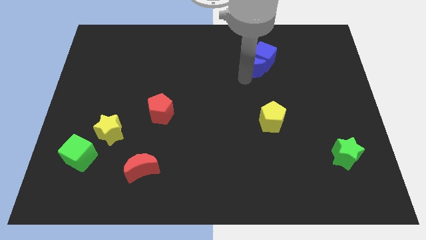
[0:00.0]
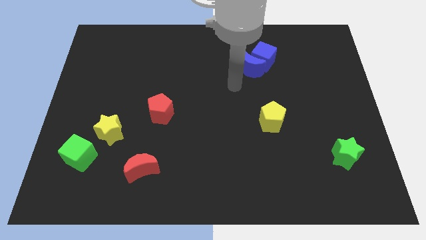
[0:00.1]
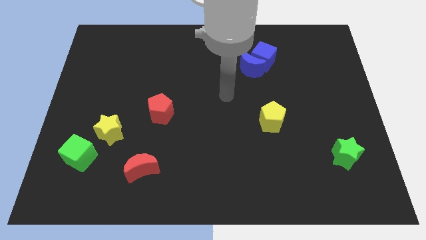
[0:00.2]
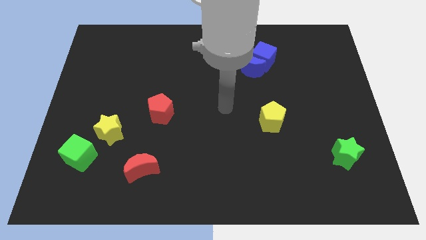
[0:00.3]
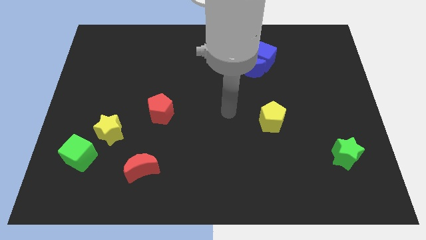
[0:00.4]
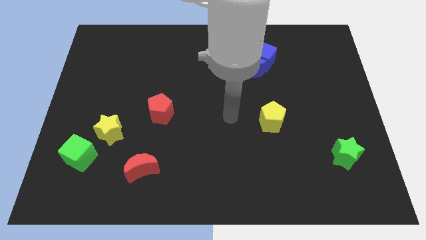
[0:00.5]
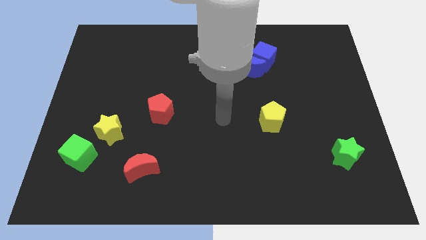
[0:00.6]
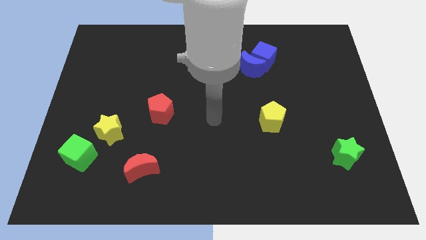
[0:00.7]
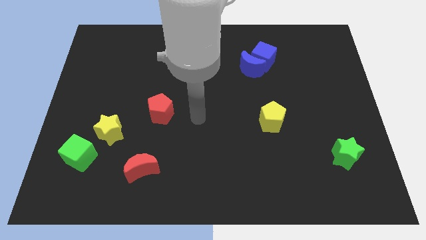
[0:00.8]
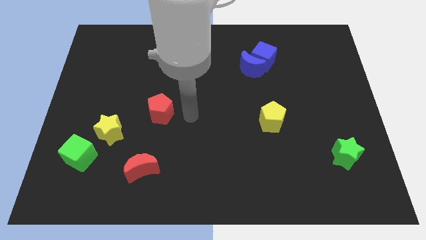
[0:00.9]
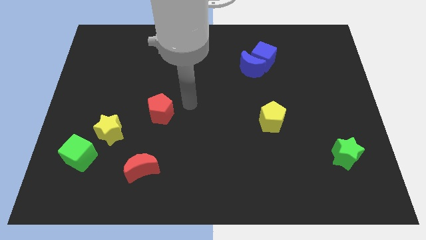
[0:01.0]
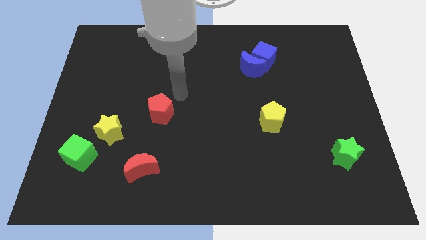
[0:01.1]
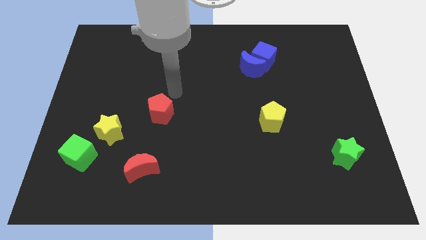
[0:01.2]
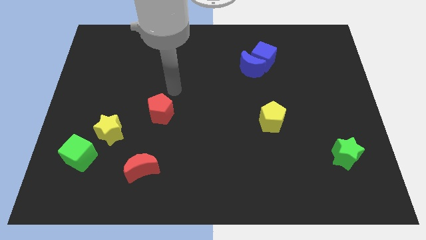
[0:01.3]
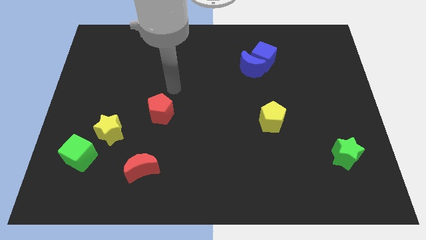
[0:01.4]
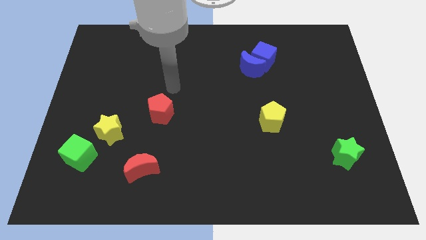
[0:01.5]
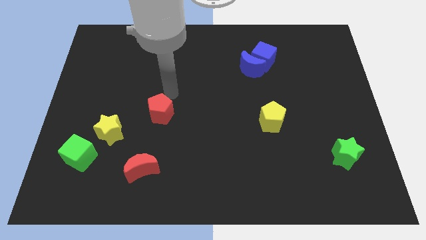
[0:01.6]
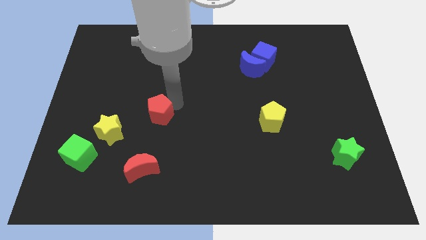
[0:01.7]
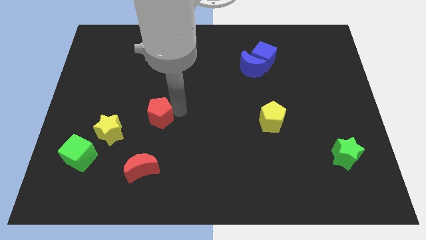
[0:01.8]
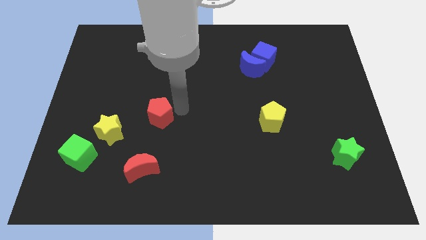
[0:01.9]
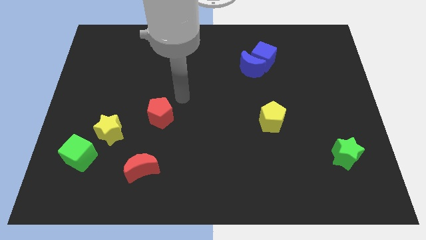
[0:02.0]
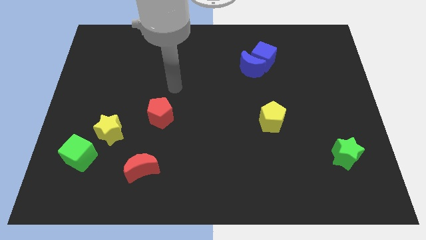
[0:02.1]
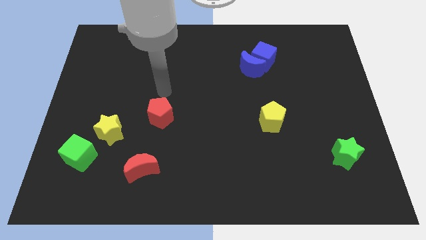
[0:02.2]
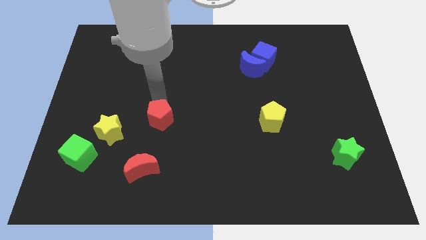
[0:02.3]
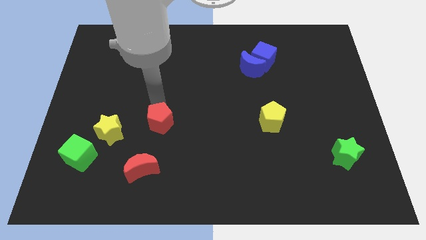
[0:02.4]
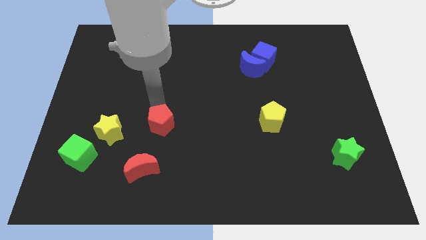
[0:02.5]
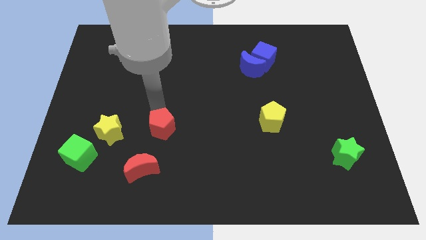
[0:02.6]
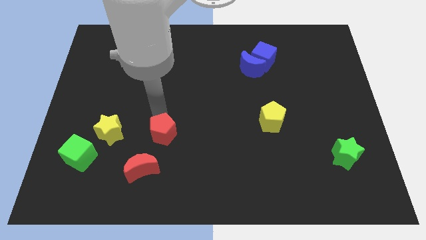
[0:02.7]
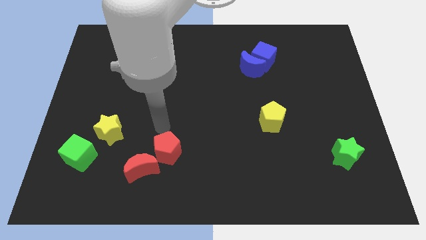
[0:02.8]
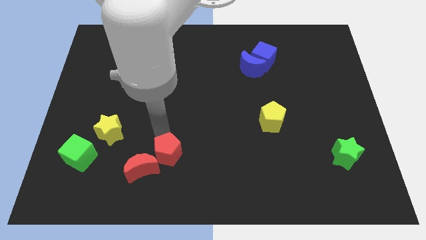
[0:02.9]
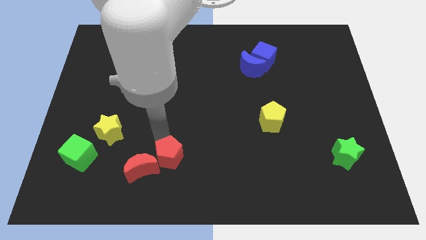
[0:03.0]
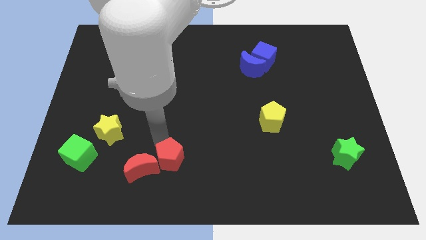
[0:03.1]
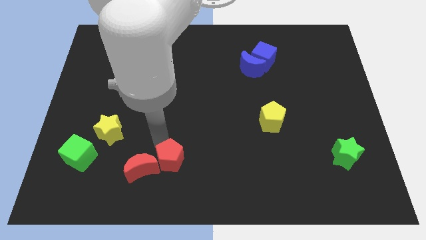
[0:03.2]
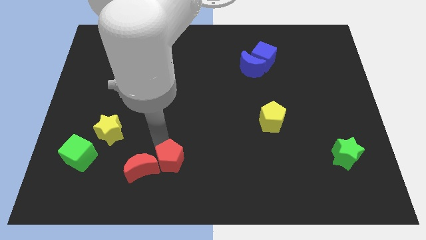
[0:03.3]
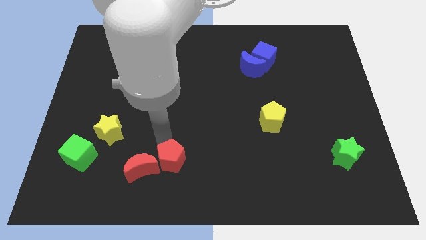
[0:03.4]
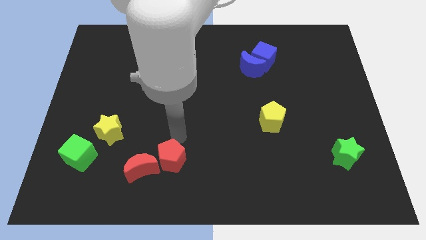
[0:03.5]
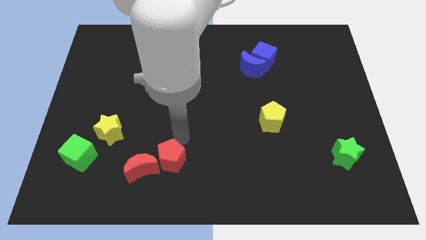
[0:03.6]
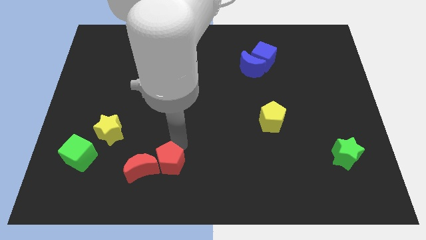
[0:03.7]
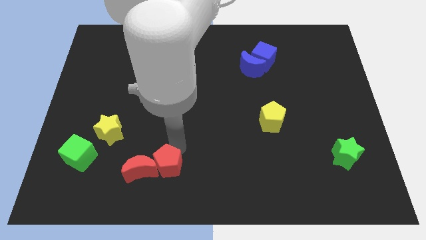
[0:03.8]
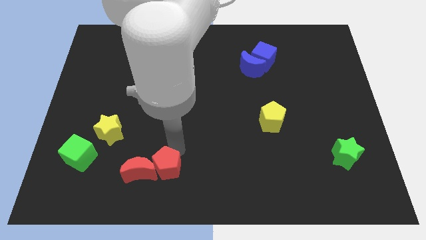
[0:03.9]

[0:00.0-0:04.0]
place the red pentagon to the right of the rec crescent

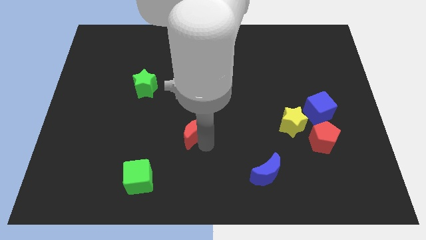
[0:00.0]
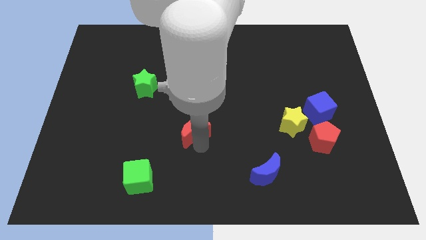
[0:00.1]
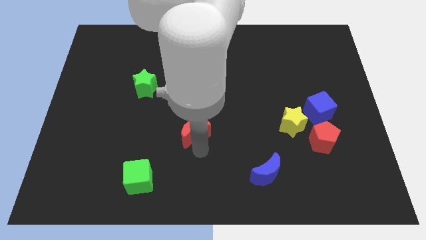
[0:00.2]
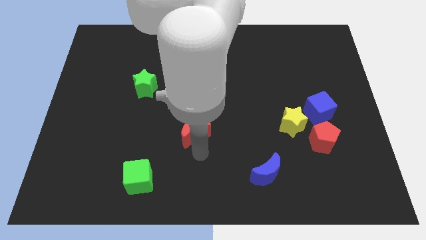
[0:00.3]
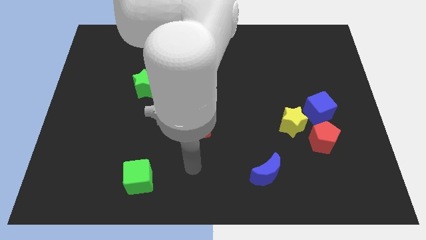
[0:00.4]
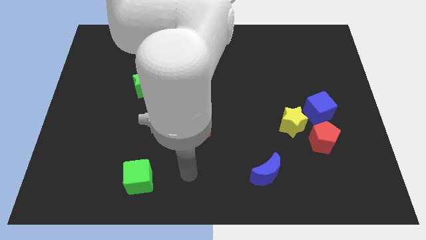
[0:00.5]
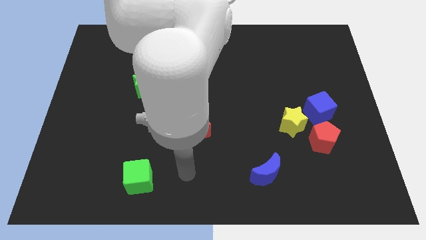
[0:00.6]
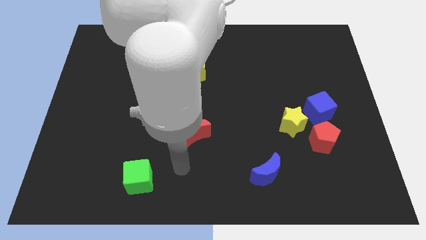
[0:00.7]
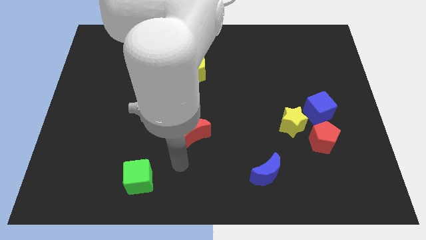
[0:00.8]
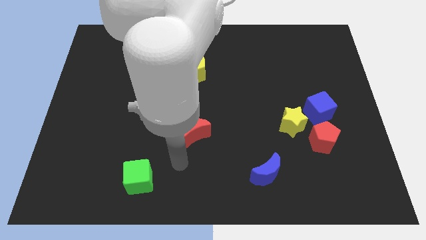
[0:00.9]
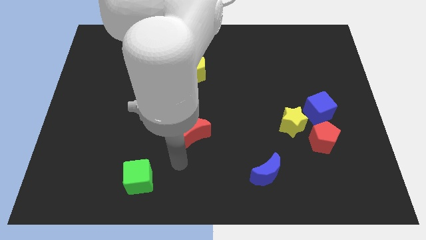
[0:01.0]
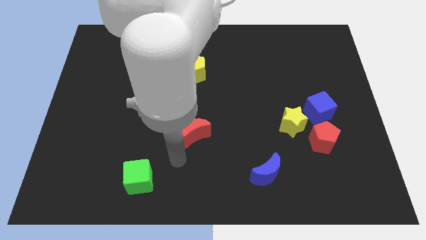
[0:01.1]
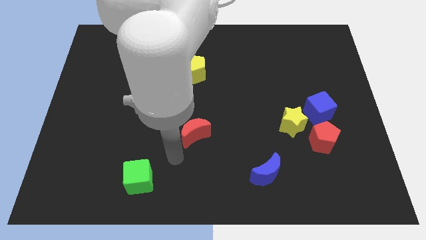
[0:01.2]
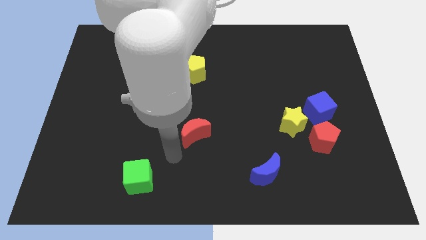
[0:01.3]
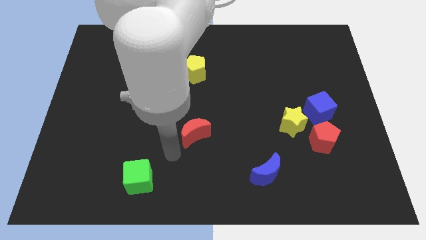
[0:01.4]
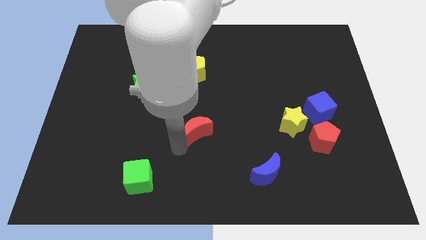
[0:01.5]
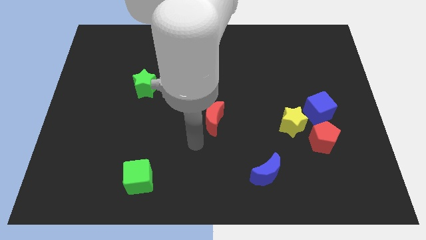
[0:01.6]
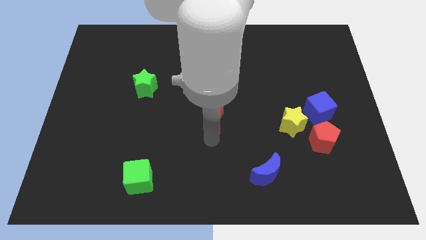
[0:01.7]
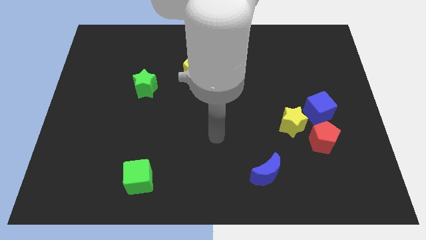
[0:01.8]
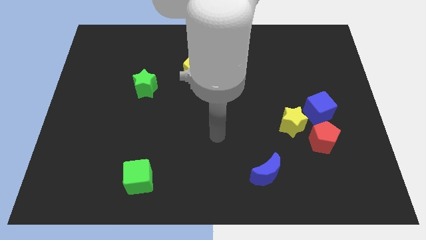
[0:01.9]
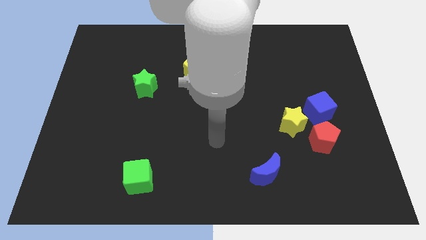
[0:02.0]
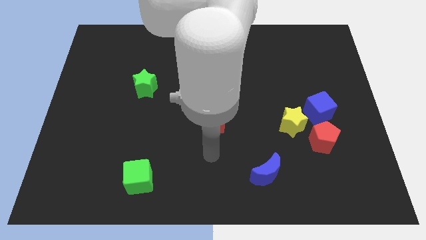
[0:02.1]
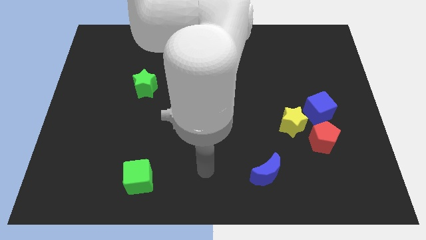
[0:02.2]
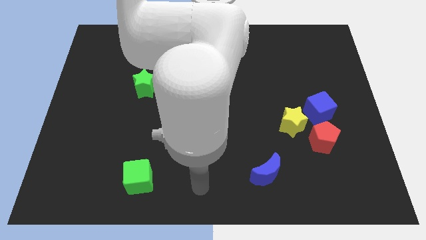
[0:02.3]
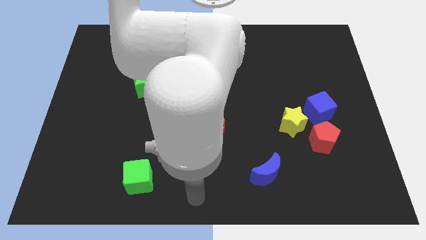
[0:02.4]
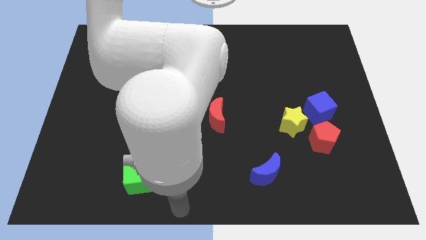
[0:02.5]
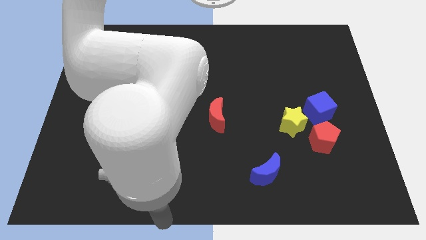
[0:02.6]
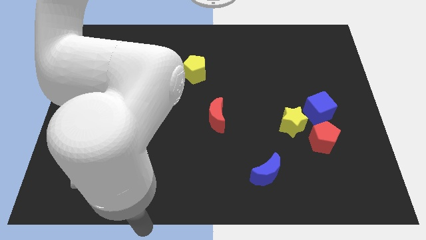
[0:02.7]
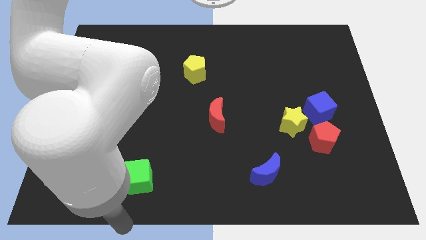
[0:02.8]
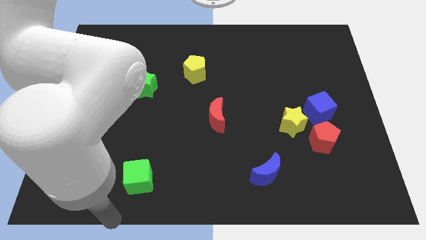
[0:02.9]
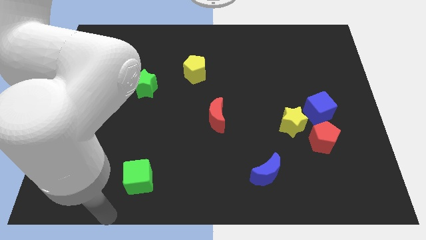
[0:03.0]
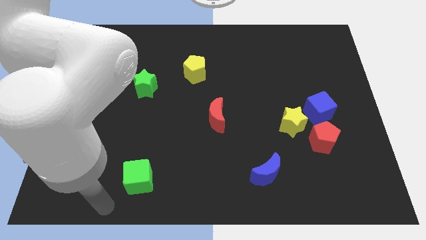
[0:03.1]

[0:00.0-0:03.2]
move red moon to the bottom right of the yellow pentagon

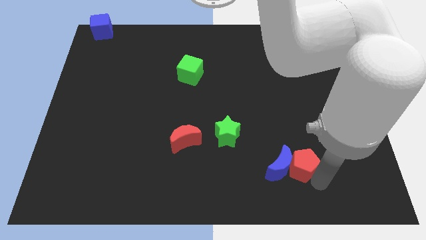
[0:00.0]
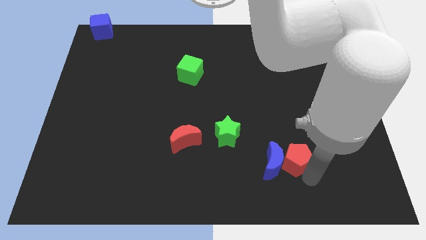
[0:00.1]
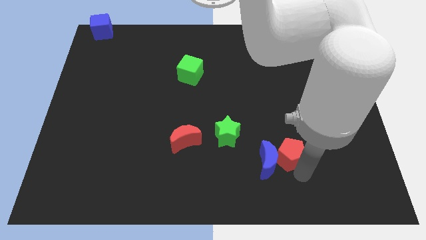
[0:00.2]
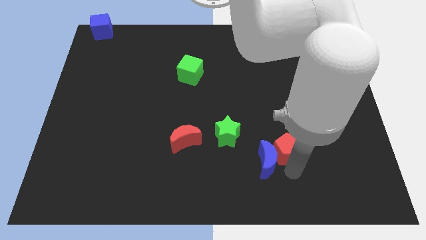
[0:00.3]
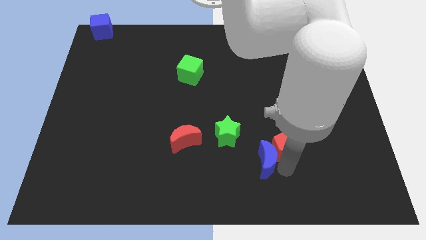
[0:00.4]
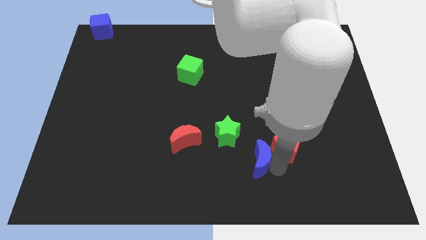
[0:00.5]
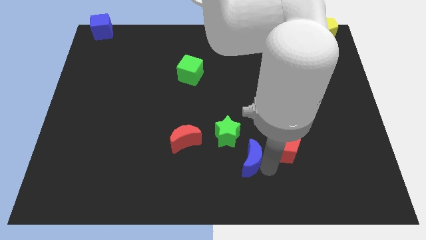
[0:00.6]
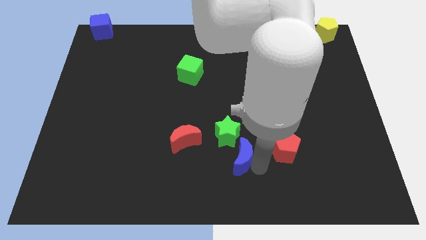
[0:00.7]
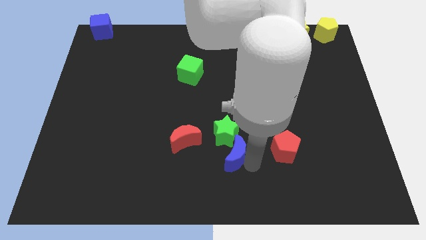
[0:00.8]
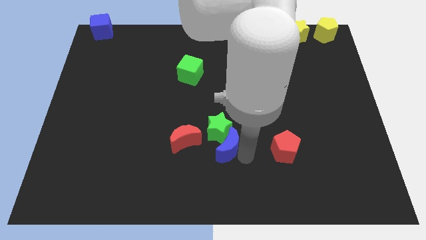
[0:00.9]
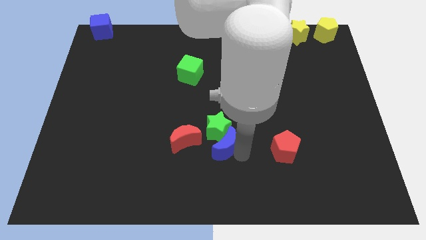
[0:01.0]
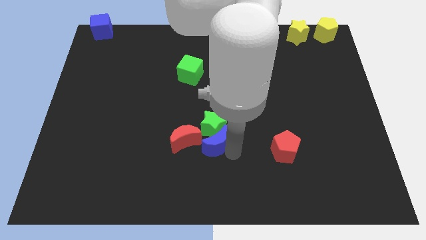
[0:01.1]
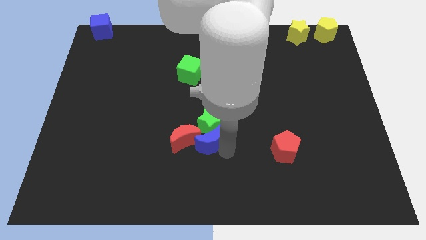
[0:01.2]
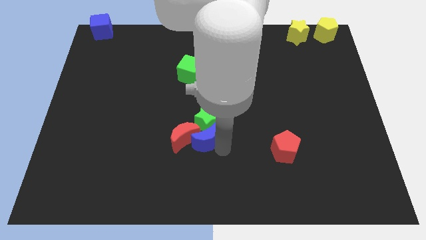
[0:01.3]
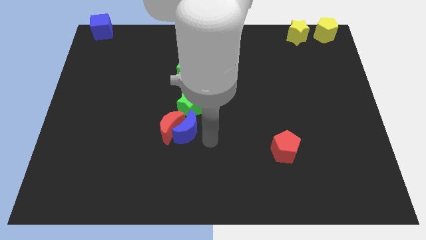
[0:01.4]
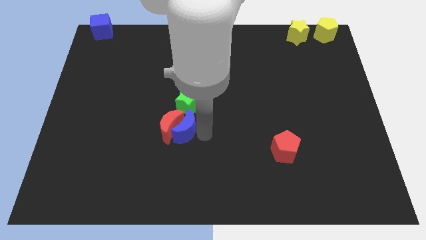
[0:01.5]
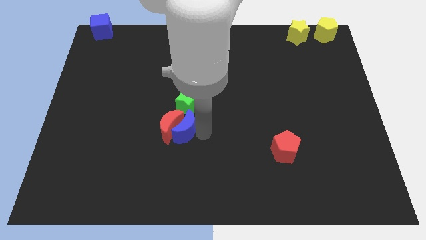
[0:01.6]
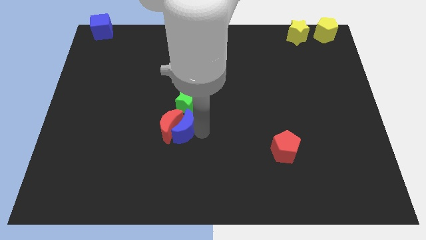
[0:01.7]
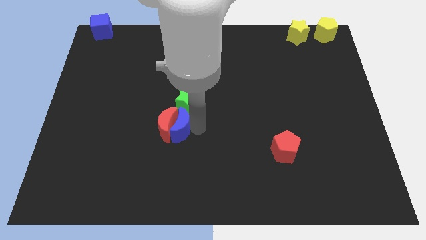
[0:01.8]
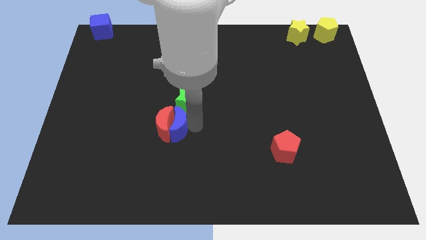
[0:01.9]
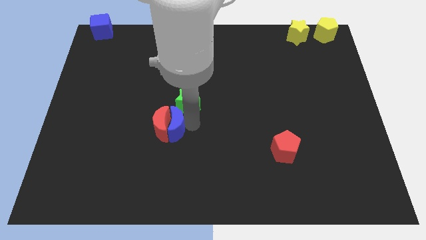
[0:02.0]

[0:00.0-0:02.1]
push the blue moon towards the red half moon
